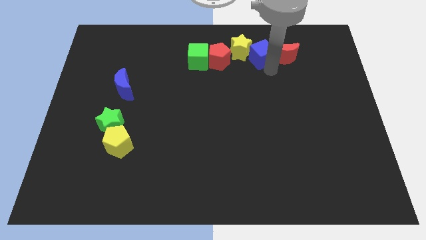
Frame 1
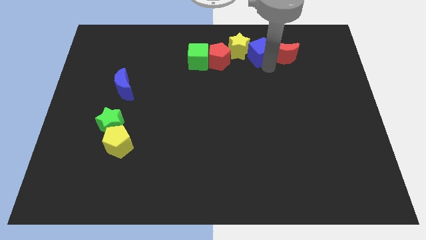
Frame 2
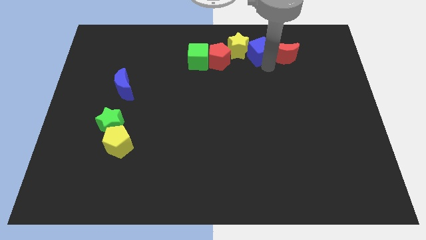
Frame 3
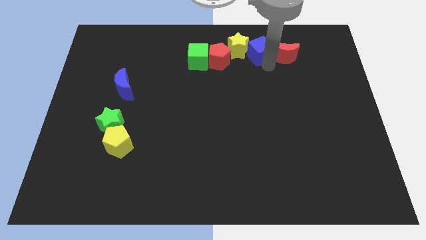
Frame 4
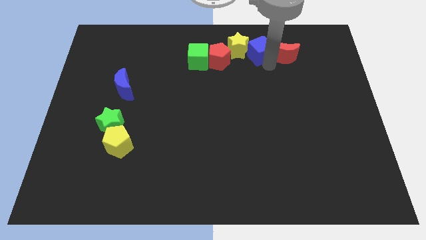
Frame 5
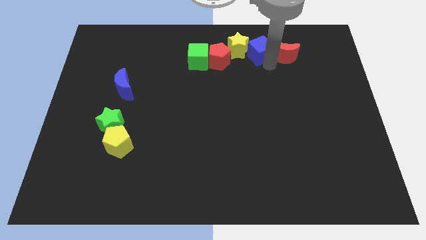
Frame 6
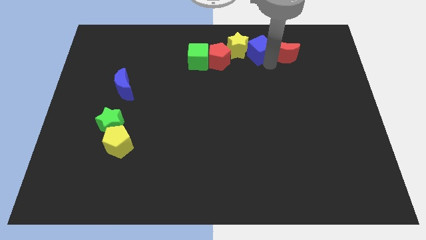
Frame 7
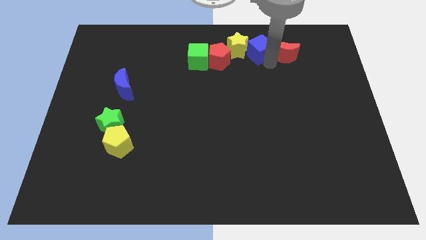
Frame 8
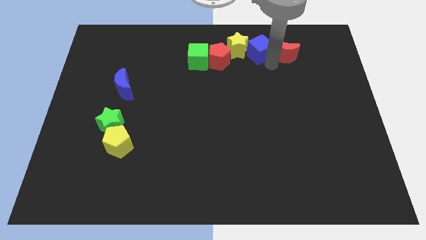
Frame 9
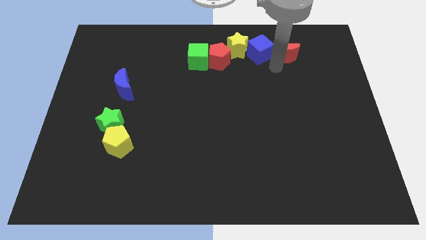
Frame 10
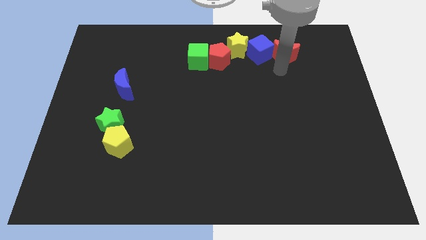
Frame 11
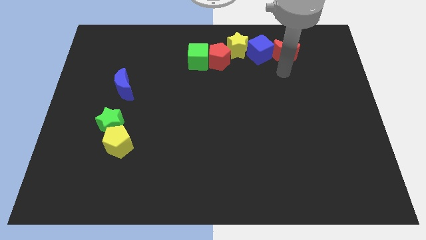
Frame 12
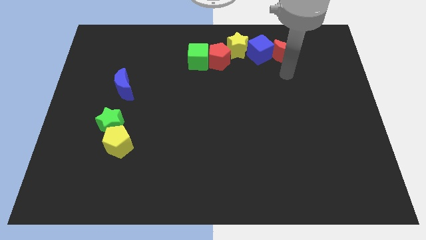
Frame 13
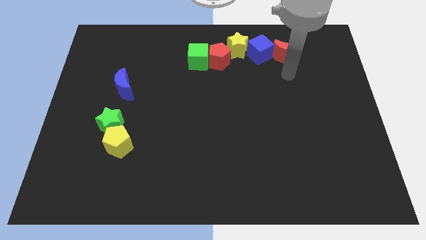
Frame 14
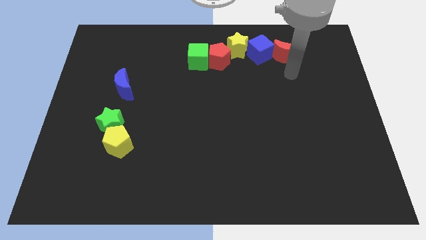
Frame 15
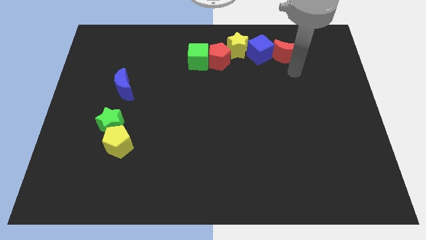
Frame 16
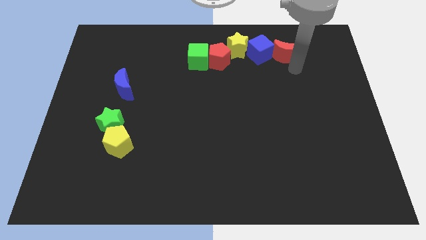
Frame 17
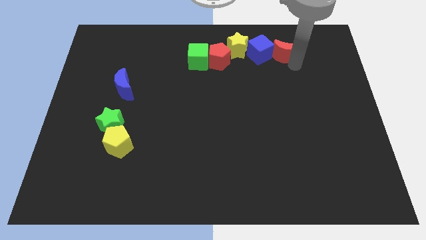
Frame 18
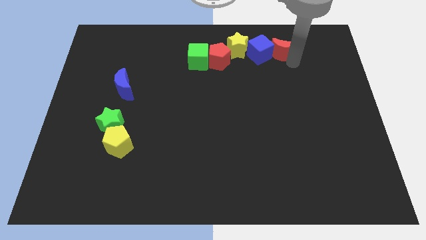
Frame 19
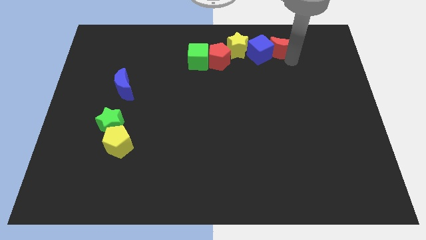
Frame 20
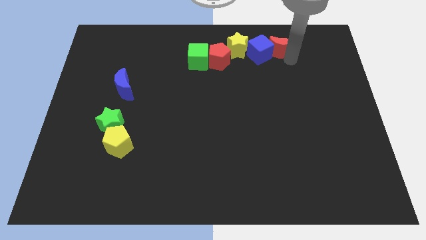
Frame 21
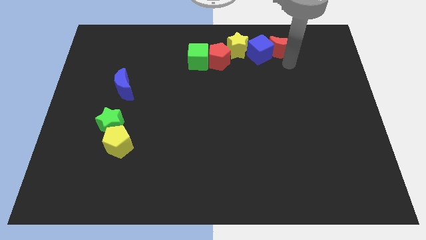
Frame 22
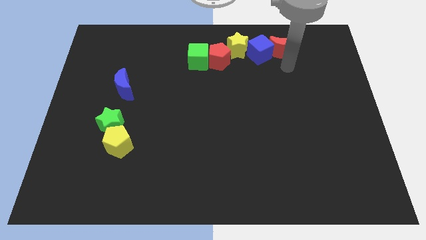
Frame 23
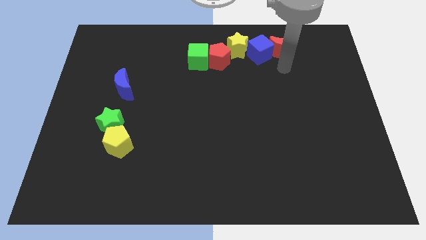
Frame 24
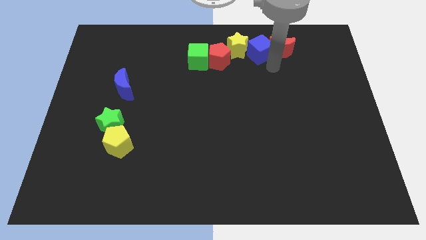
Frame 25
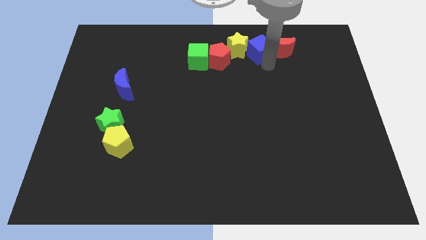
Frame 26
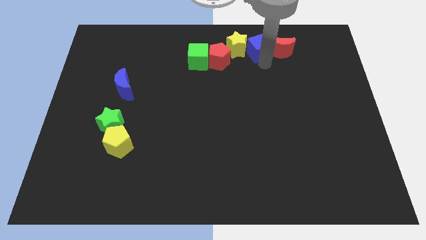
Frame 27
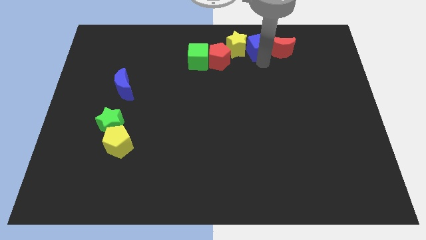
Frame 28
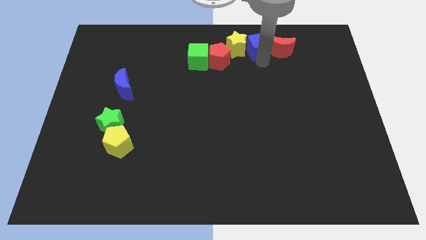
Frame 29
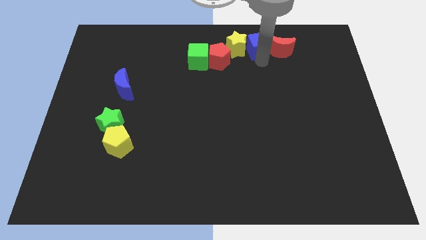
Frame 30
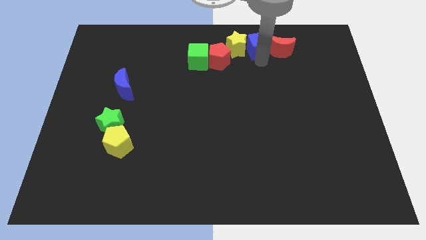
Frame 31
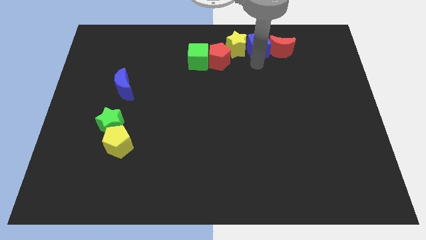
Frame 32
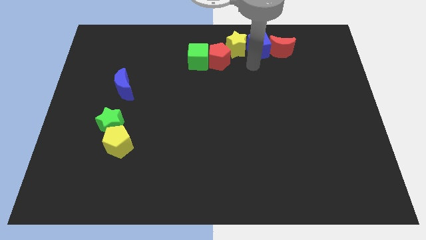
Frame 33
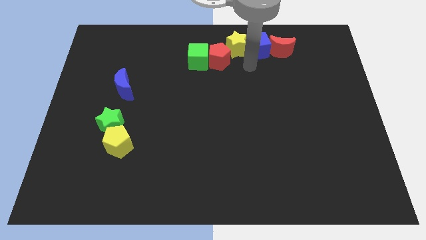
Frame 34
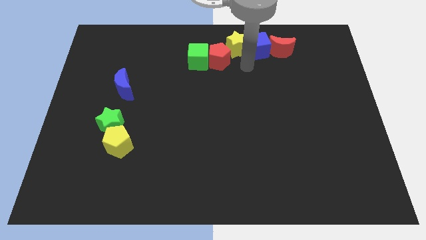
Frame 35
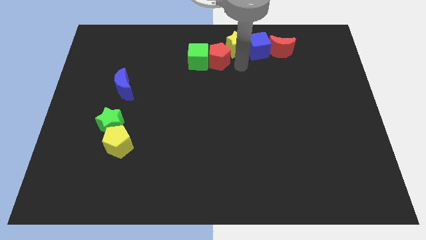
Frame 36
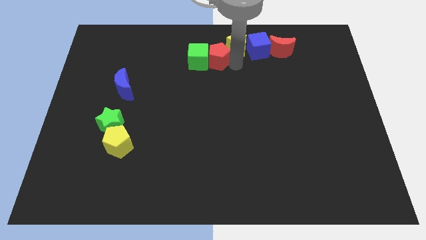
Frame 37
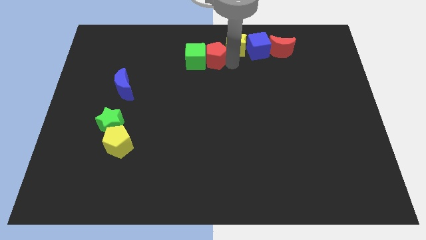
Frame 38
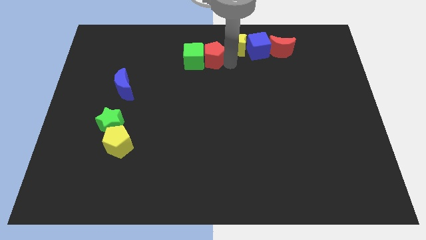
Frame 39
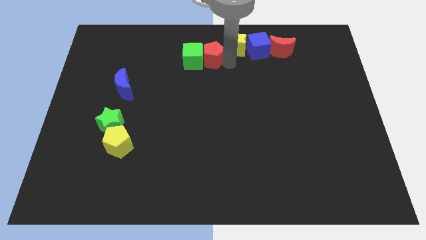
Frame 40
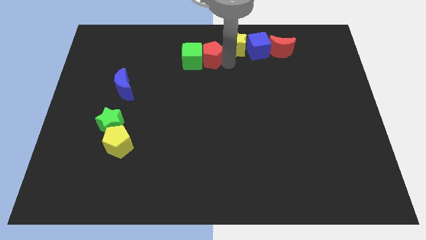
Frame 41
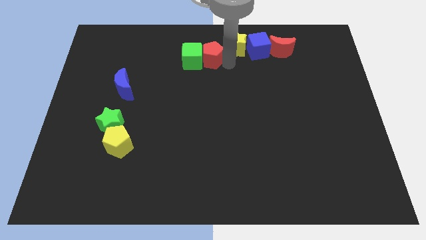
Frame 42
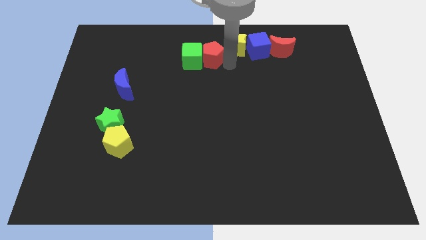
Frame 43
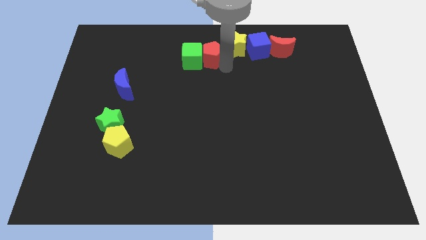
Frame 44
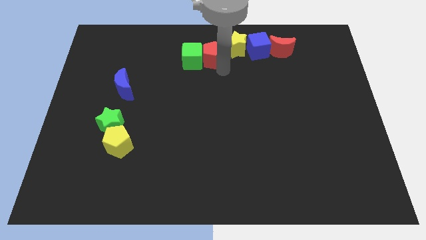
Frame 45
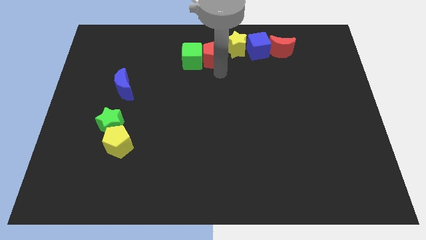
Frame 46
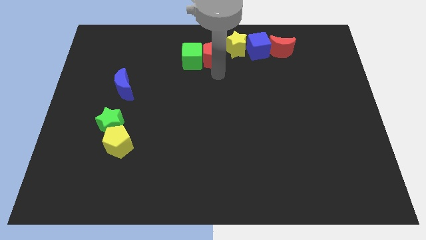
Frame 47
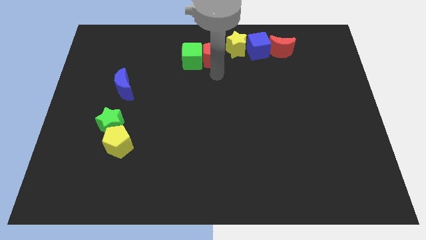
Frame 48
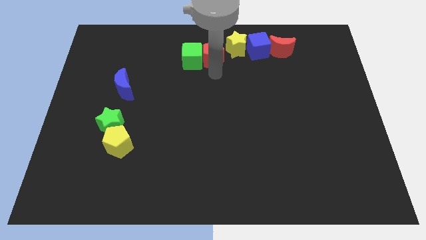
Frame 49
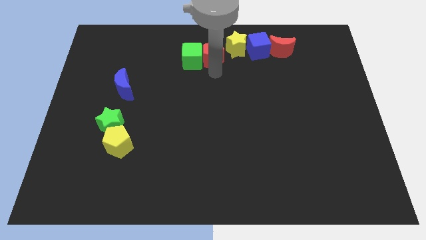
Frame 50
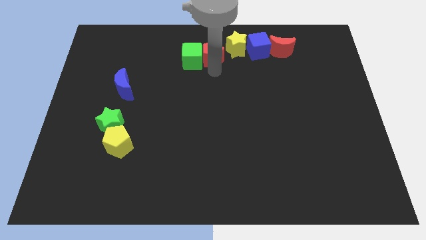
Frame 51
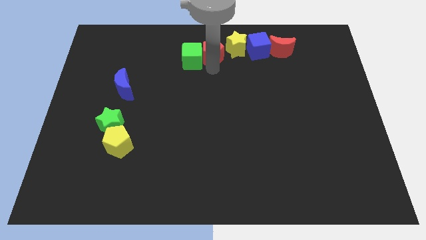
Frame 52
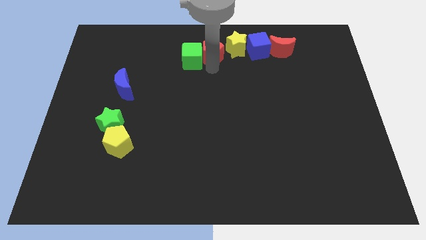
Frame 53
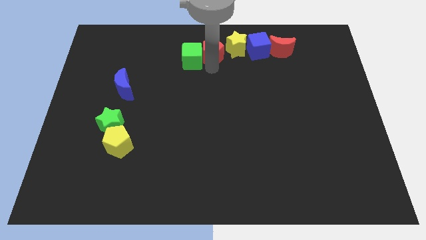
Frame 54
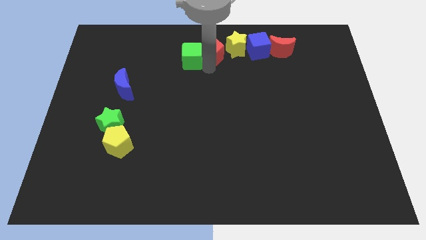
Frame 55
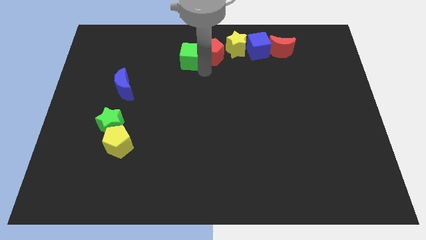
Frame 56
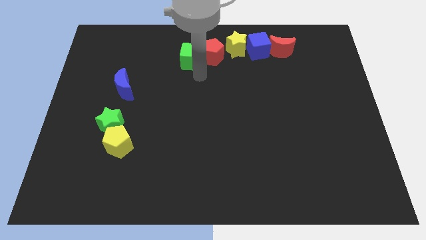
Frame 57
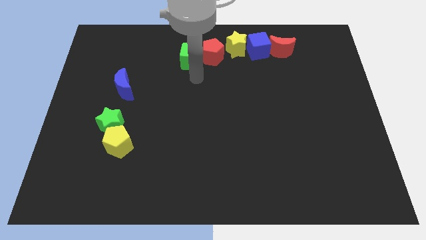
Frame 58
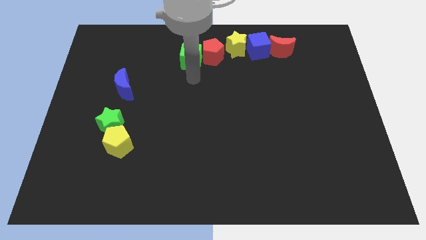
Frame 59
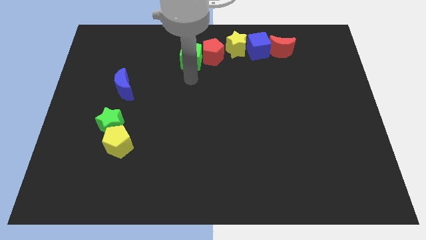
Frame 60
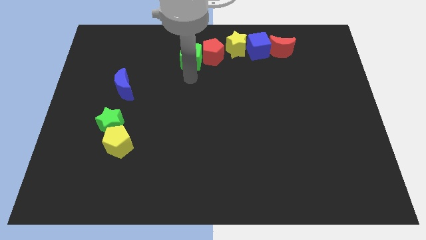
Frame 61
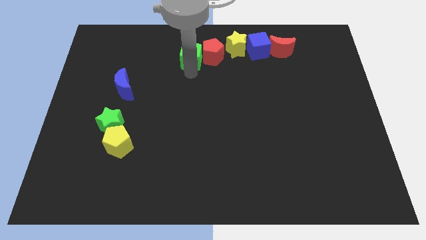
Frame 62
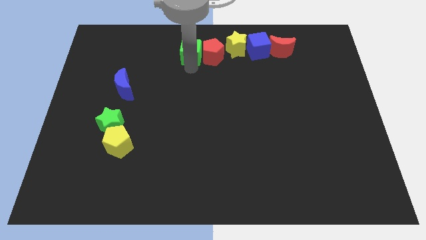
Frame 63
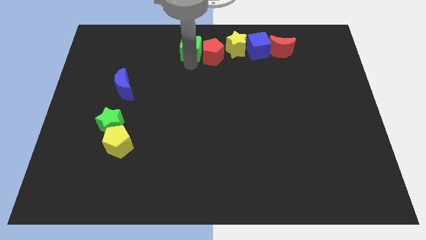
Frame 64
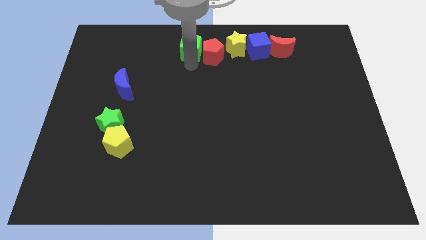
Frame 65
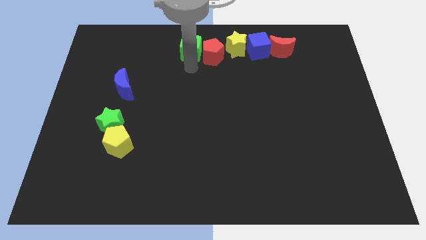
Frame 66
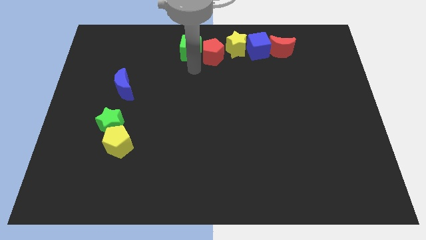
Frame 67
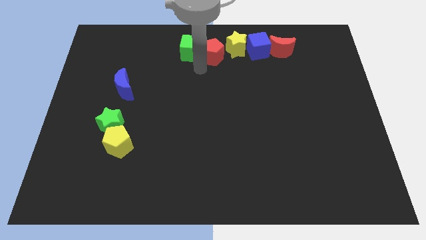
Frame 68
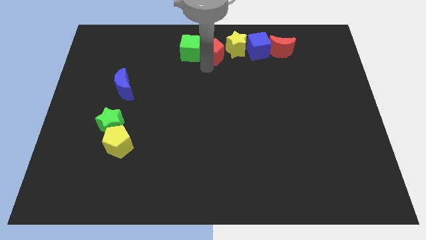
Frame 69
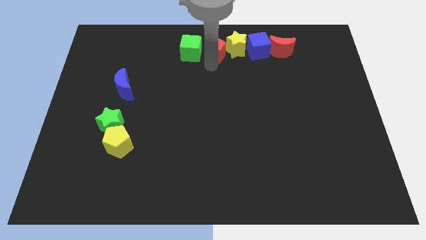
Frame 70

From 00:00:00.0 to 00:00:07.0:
adjust the blocks at the top to form a horizontal line

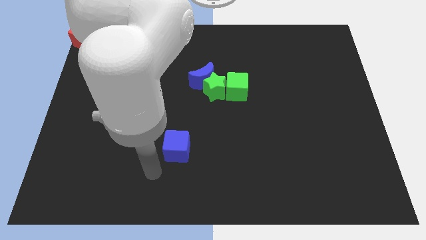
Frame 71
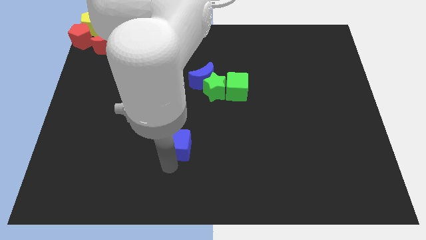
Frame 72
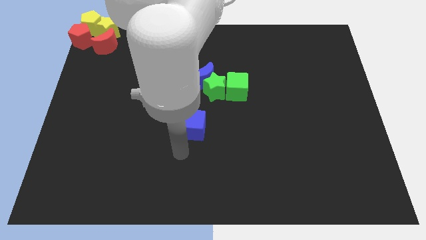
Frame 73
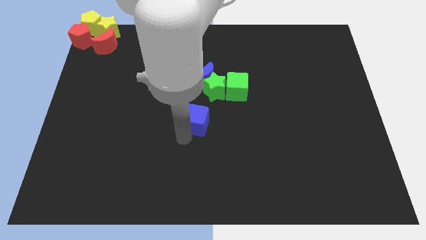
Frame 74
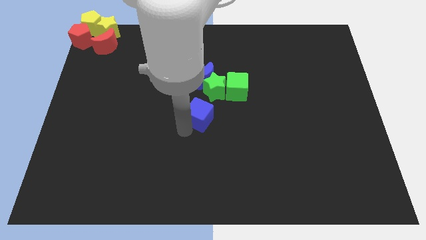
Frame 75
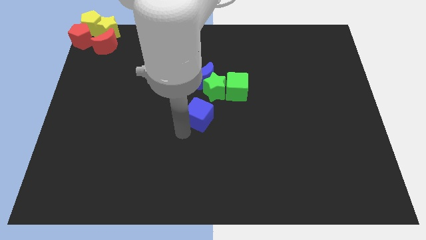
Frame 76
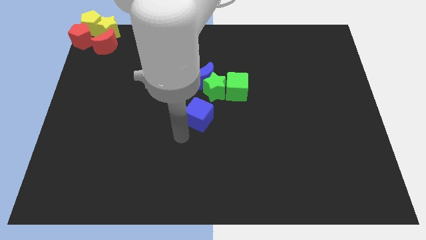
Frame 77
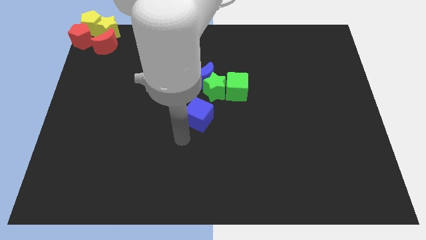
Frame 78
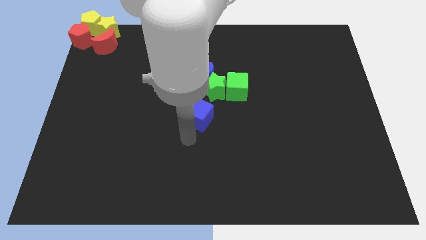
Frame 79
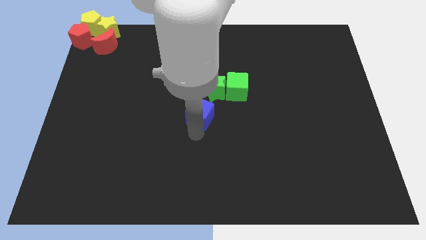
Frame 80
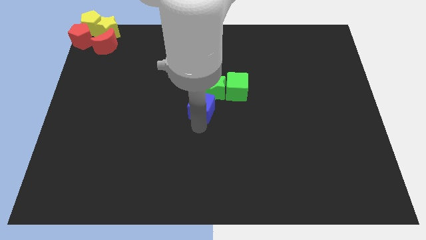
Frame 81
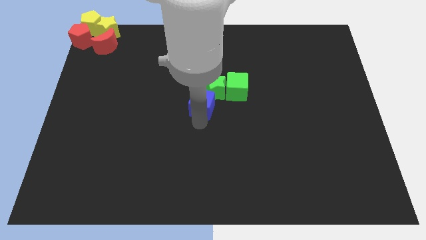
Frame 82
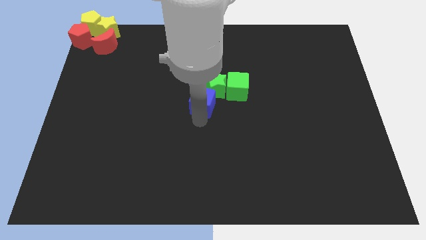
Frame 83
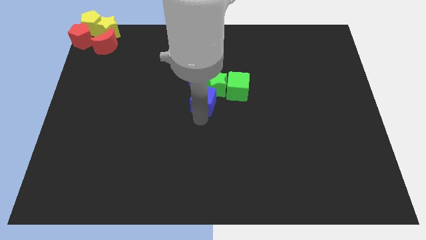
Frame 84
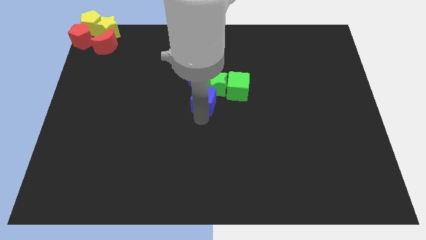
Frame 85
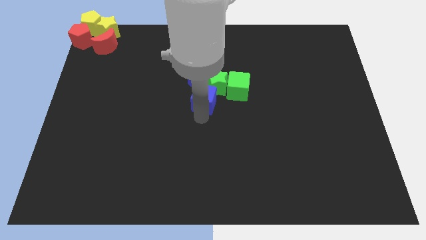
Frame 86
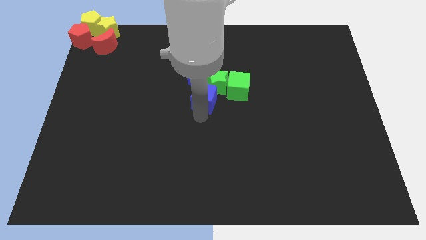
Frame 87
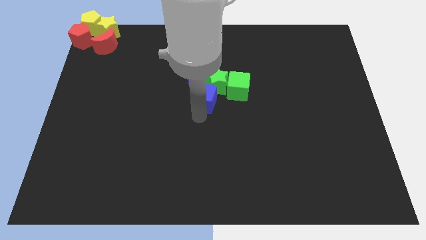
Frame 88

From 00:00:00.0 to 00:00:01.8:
move blue block into green star

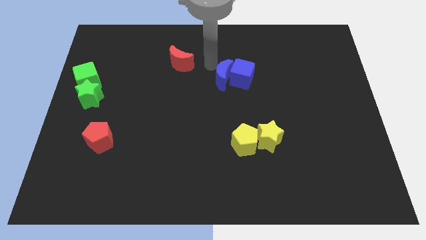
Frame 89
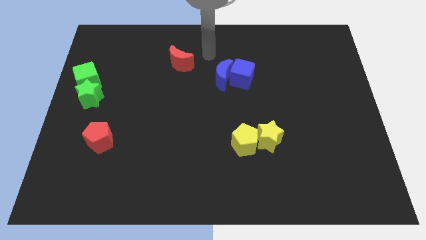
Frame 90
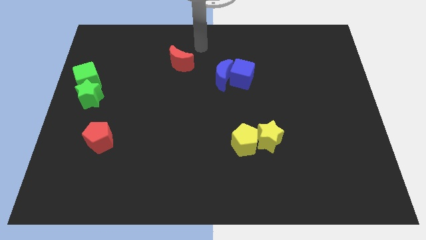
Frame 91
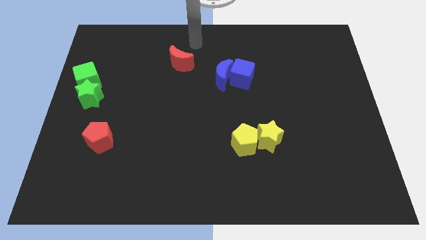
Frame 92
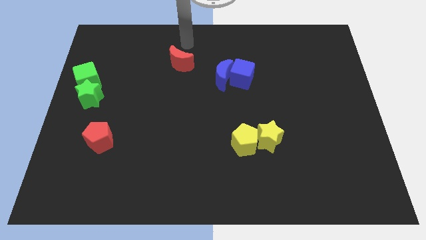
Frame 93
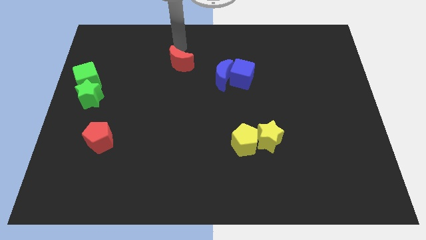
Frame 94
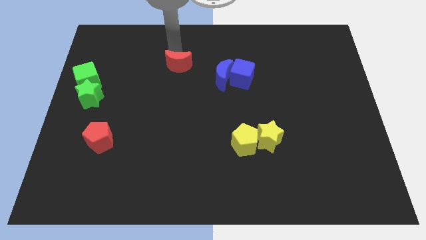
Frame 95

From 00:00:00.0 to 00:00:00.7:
go near the red moon
